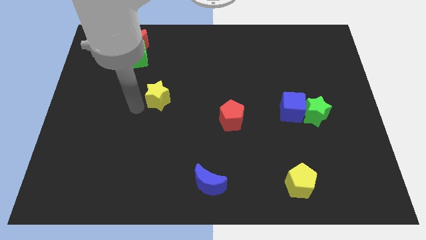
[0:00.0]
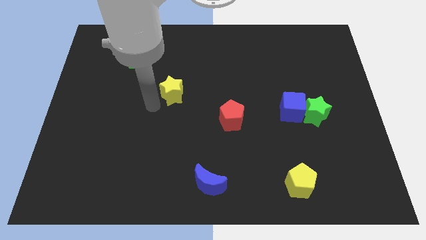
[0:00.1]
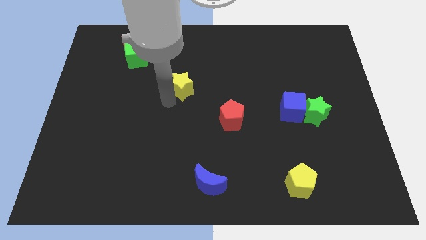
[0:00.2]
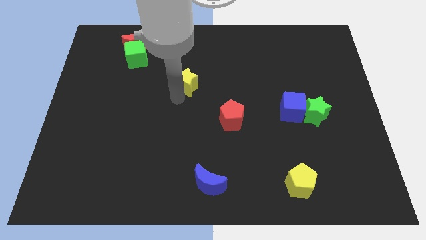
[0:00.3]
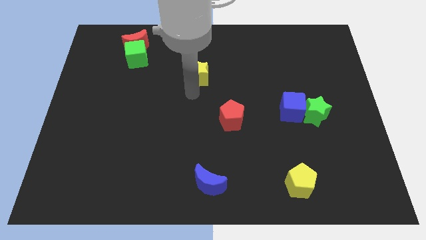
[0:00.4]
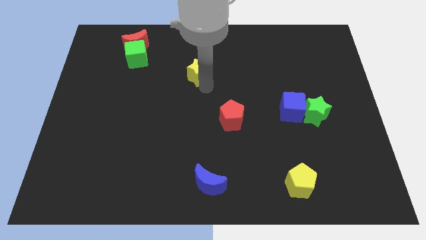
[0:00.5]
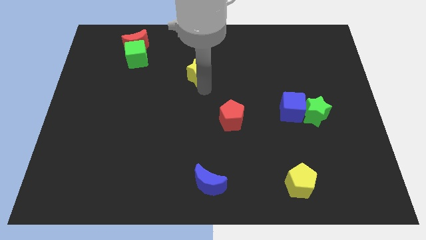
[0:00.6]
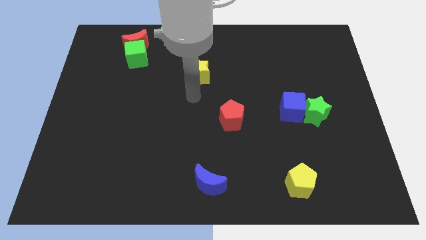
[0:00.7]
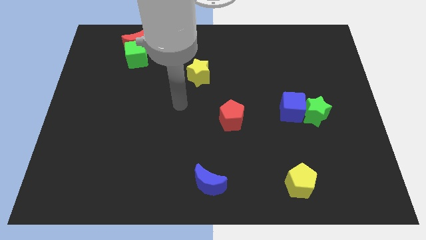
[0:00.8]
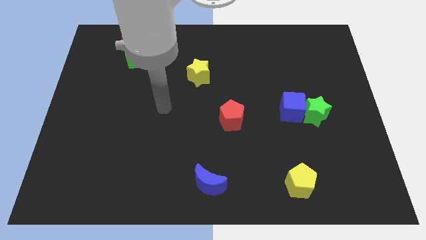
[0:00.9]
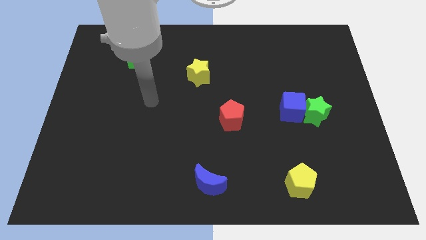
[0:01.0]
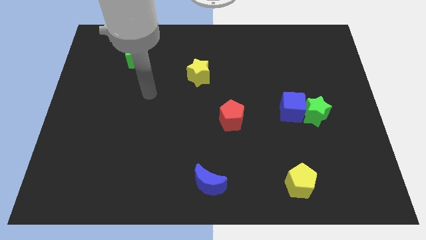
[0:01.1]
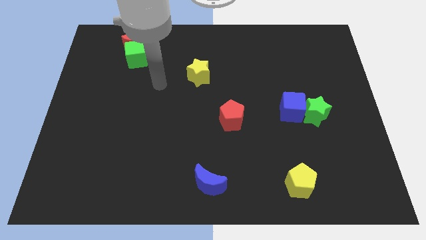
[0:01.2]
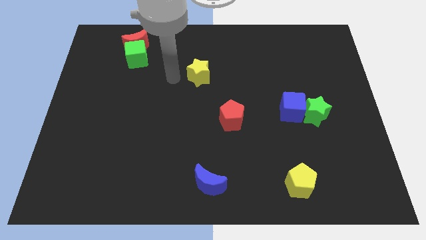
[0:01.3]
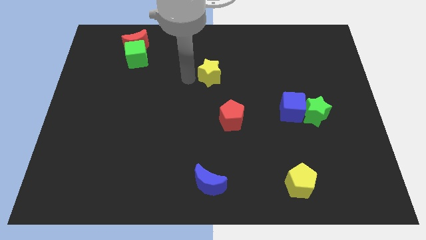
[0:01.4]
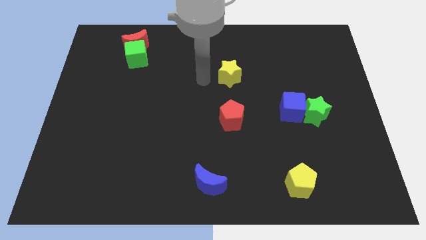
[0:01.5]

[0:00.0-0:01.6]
move the yellow star vertically above the red pentagon

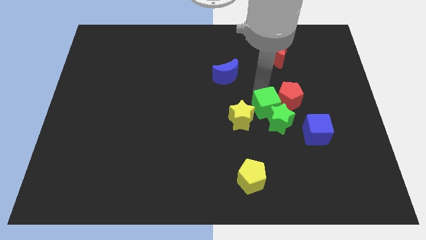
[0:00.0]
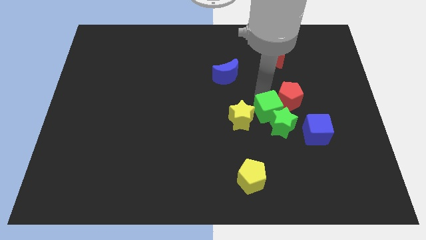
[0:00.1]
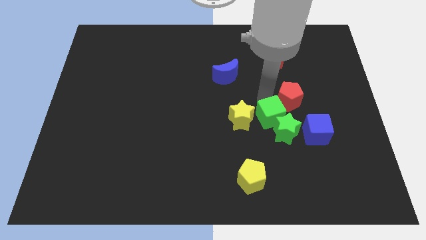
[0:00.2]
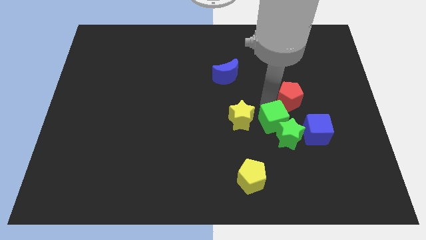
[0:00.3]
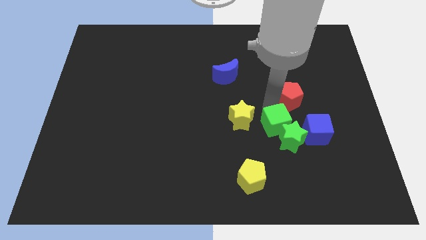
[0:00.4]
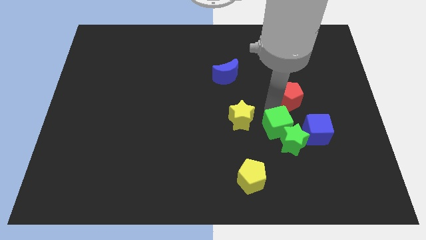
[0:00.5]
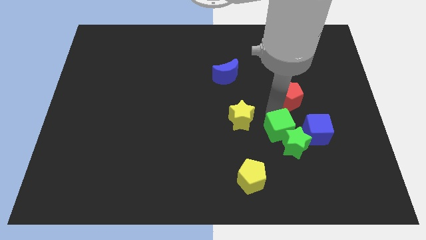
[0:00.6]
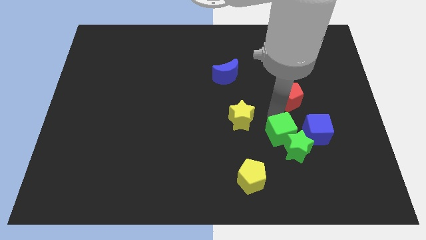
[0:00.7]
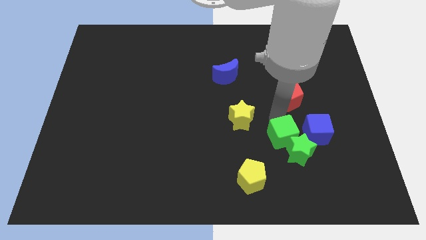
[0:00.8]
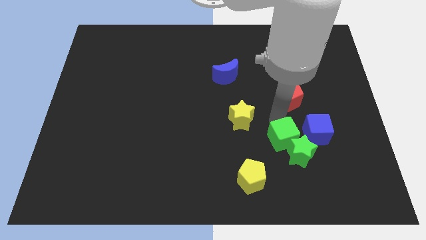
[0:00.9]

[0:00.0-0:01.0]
move green cube to the left of blue cube

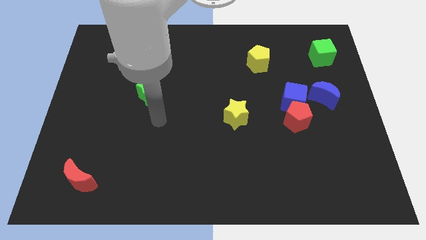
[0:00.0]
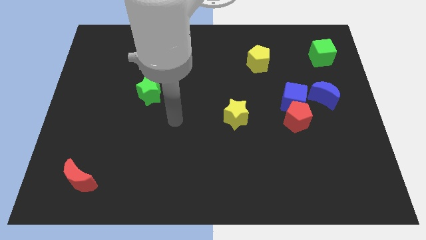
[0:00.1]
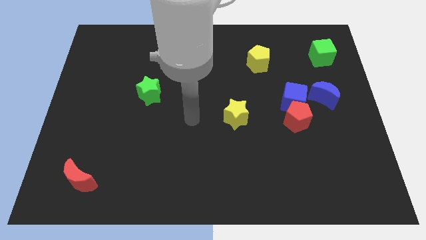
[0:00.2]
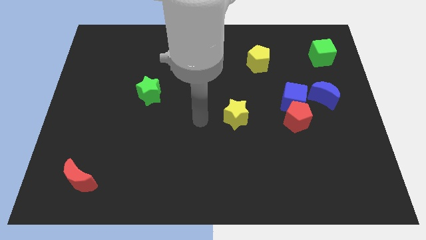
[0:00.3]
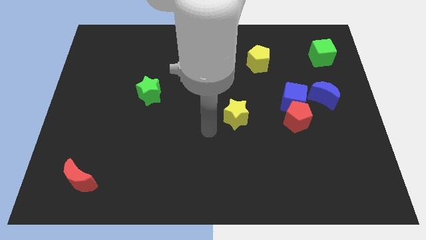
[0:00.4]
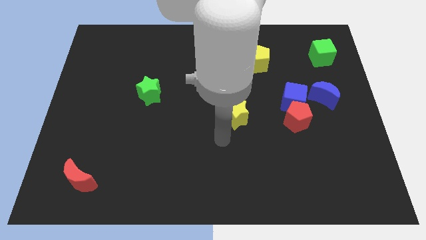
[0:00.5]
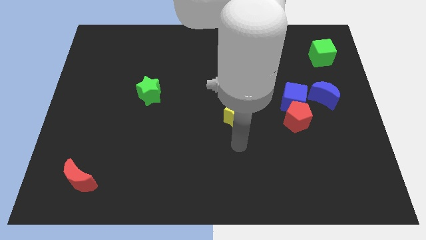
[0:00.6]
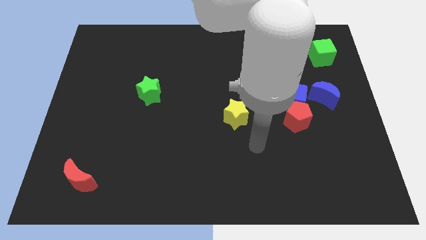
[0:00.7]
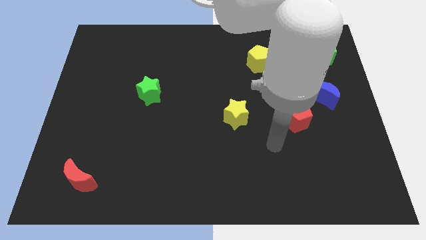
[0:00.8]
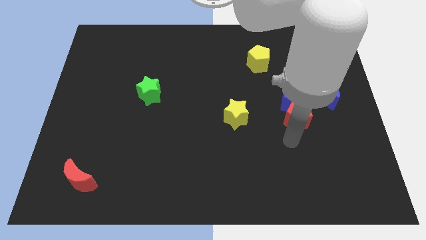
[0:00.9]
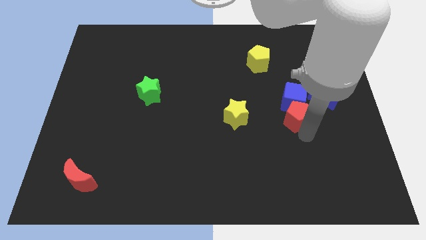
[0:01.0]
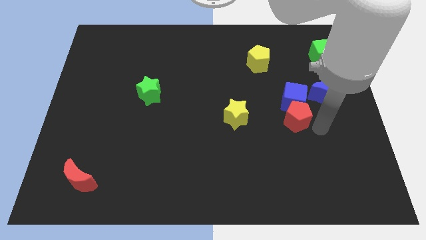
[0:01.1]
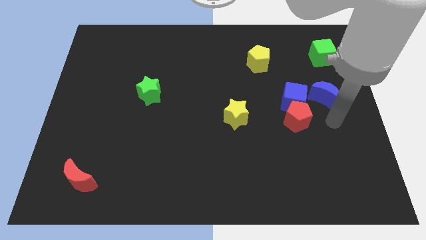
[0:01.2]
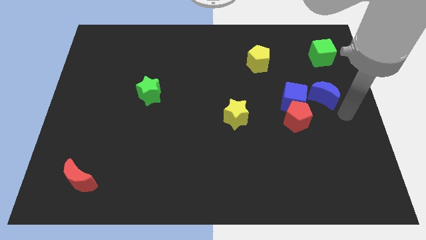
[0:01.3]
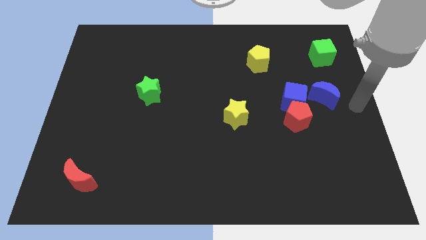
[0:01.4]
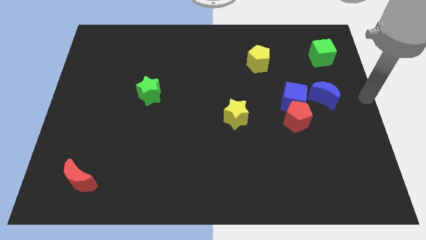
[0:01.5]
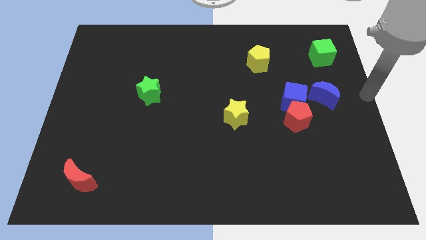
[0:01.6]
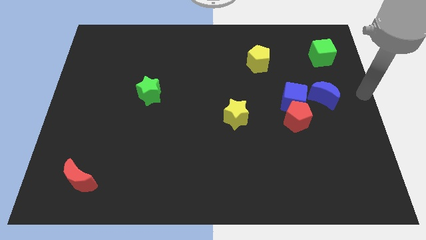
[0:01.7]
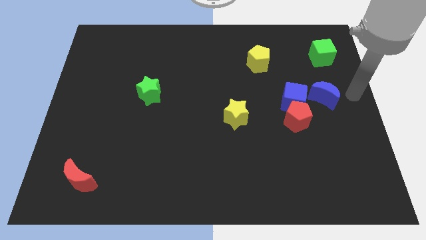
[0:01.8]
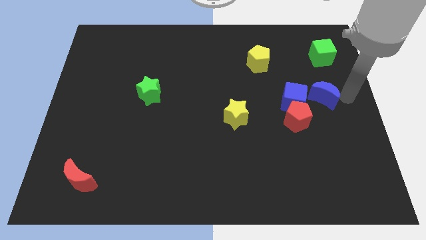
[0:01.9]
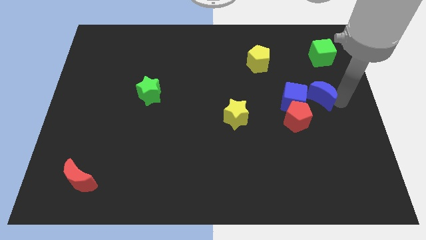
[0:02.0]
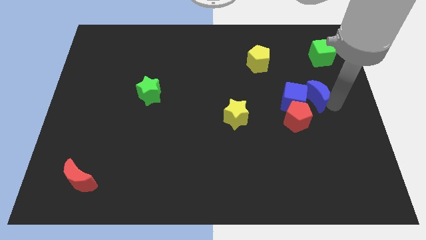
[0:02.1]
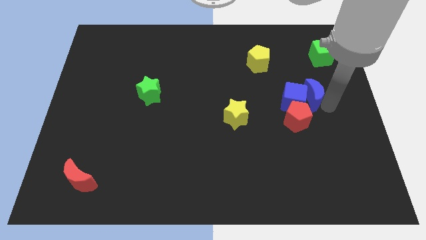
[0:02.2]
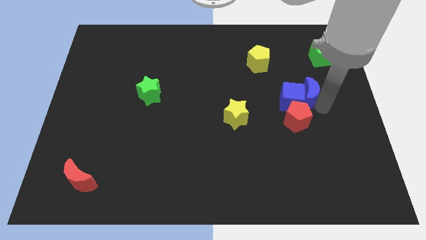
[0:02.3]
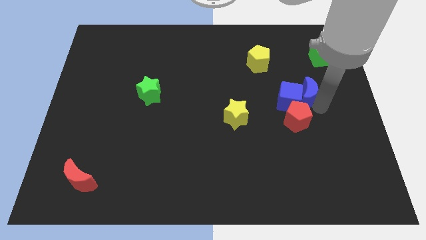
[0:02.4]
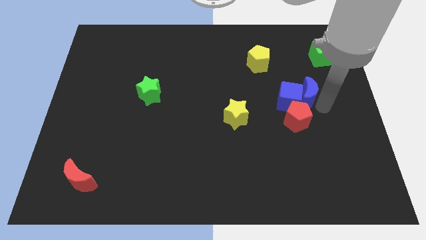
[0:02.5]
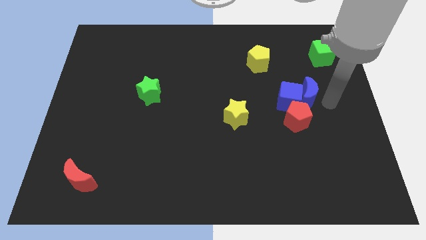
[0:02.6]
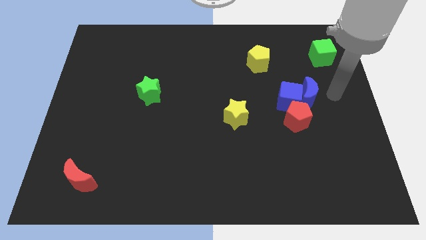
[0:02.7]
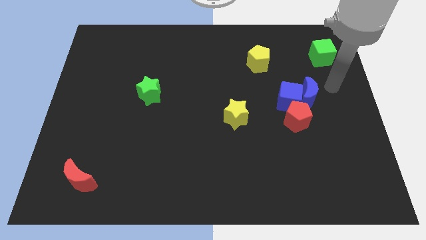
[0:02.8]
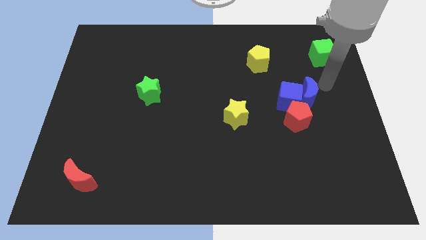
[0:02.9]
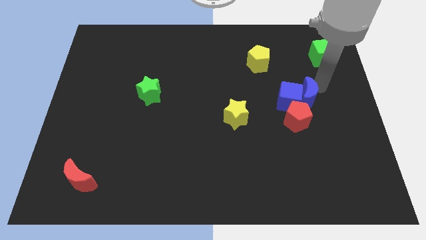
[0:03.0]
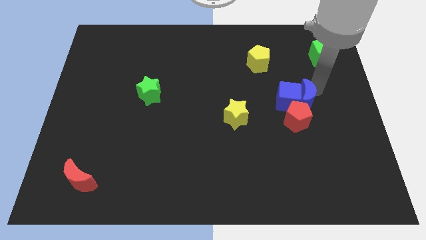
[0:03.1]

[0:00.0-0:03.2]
push the blue moon into the blue cube

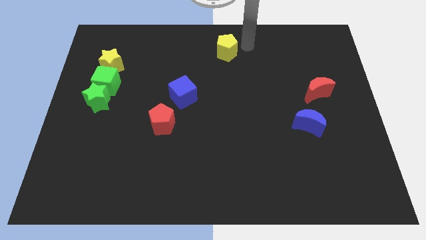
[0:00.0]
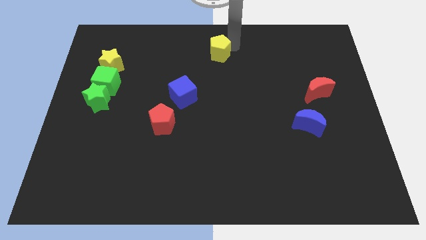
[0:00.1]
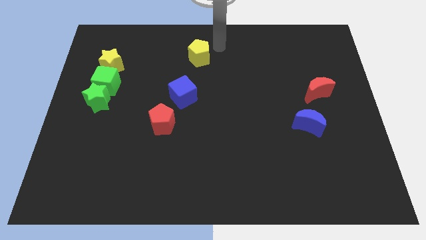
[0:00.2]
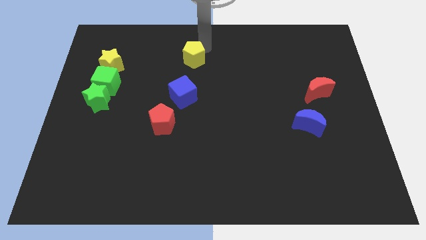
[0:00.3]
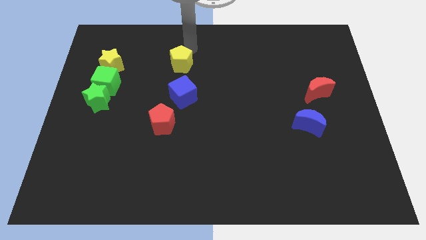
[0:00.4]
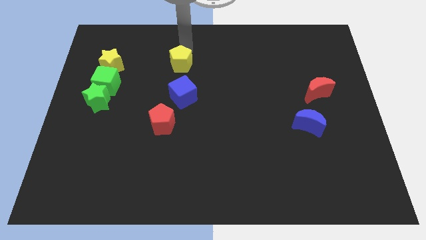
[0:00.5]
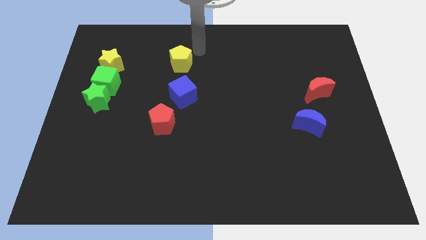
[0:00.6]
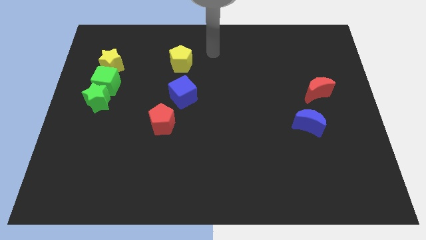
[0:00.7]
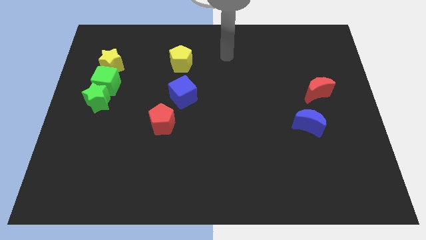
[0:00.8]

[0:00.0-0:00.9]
move the yellow pentagon vertically on top of the blue cube

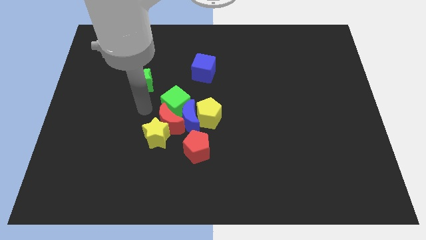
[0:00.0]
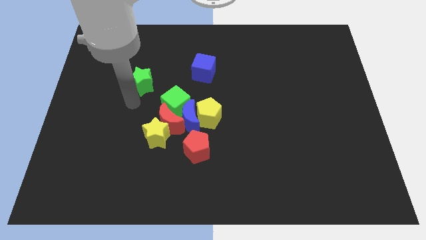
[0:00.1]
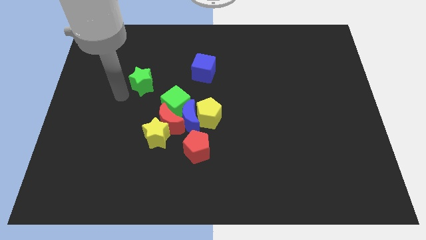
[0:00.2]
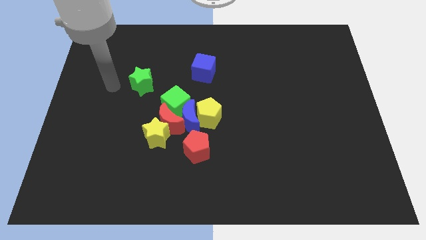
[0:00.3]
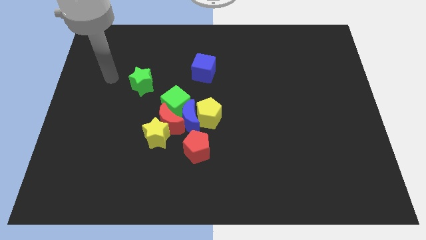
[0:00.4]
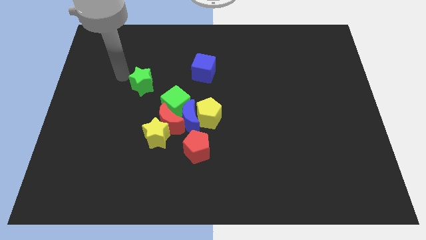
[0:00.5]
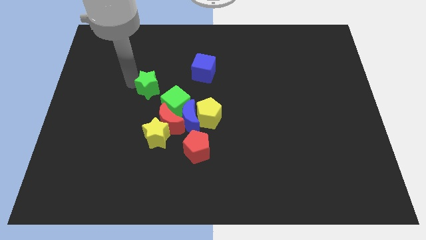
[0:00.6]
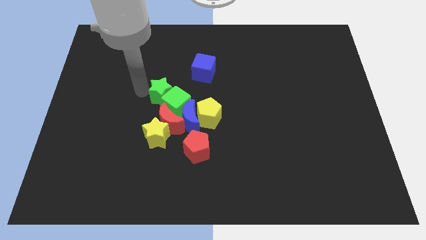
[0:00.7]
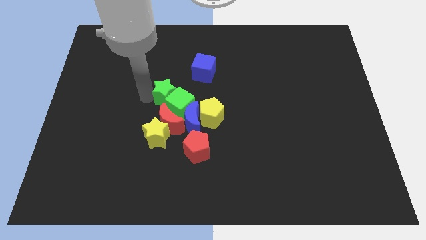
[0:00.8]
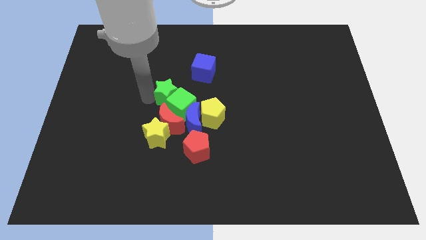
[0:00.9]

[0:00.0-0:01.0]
push the green star into the green cube

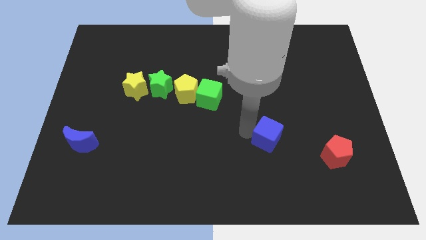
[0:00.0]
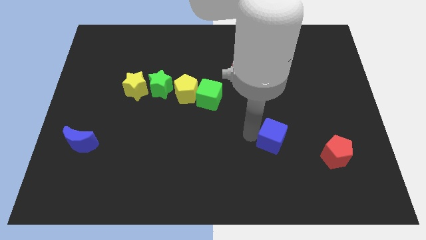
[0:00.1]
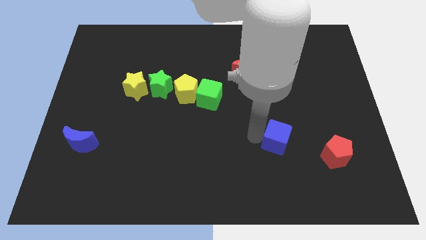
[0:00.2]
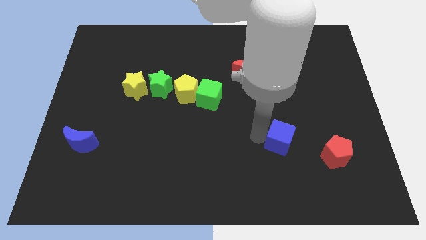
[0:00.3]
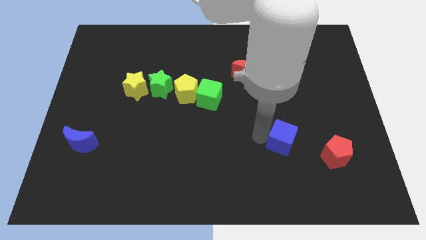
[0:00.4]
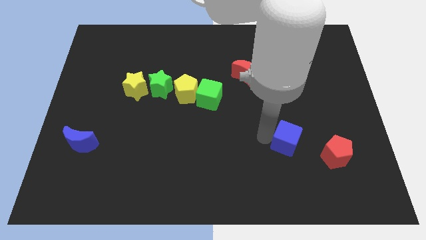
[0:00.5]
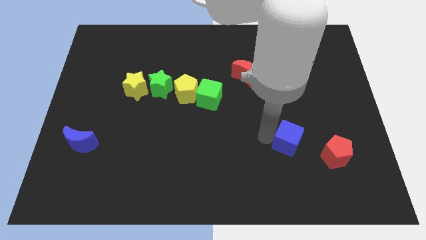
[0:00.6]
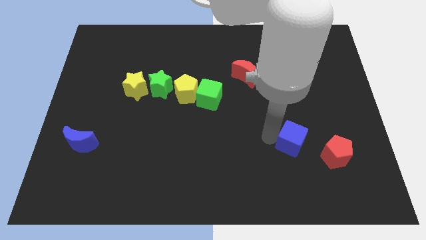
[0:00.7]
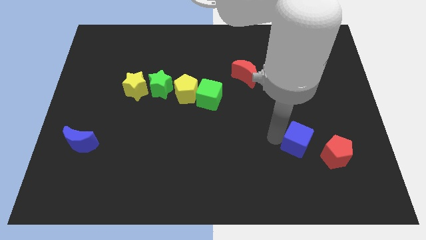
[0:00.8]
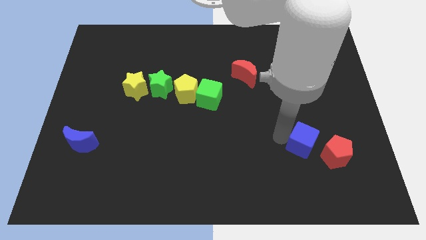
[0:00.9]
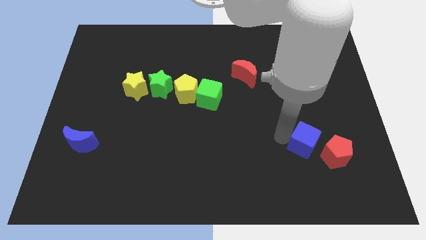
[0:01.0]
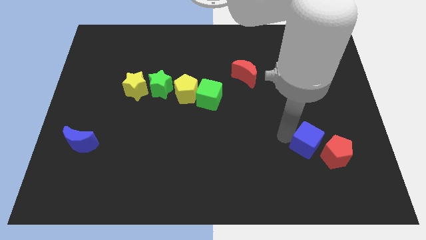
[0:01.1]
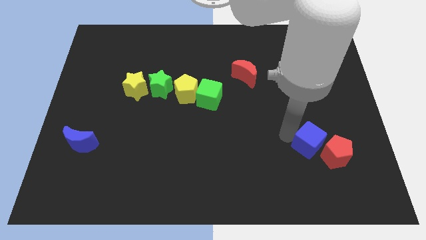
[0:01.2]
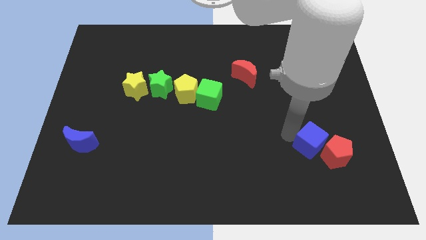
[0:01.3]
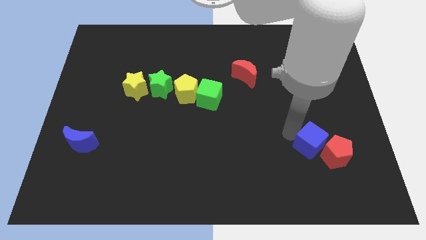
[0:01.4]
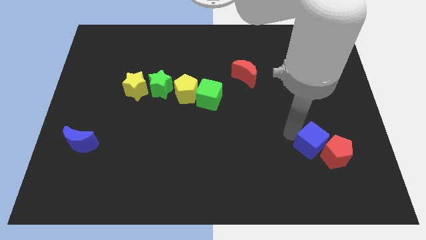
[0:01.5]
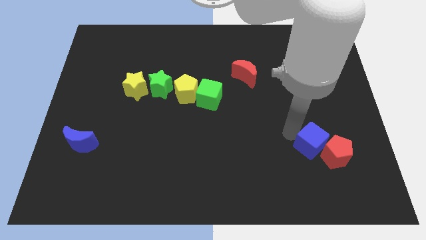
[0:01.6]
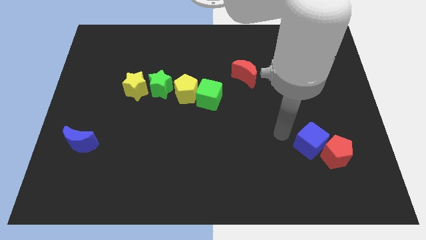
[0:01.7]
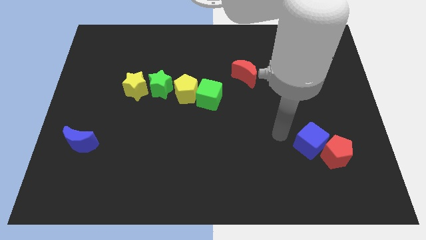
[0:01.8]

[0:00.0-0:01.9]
move the blue cube into the left side of the red pentagon
